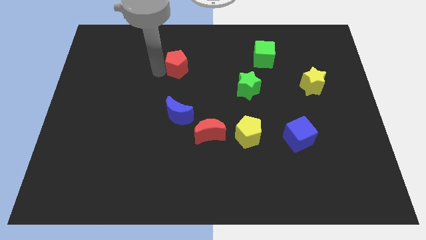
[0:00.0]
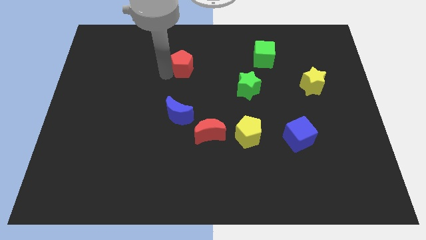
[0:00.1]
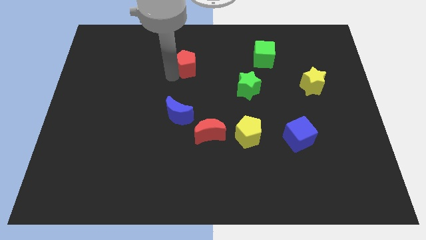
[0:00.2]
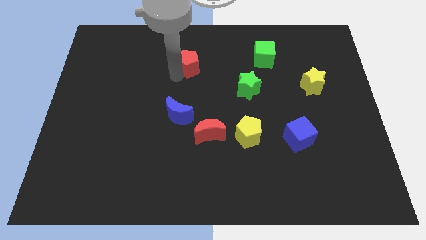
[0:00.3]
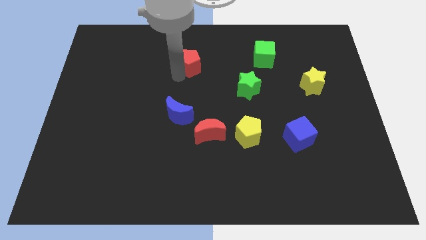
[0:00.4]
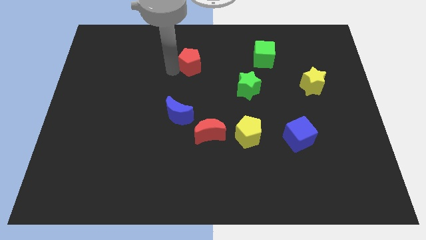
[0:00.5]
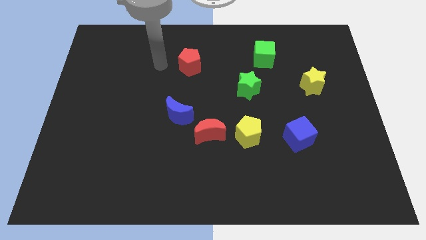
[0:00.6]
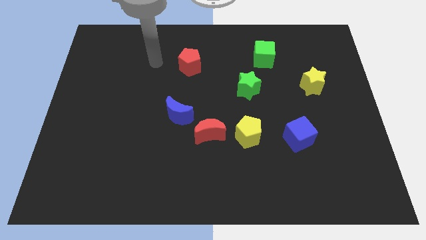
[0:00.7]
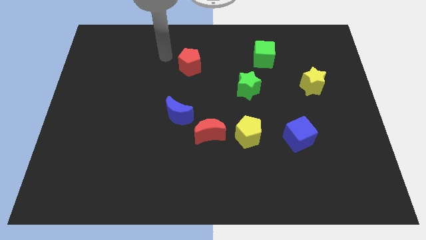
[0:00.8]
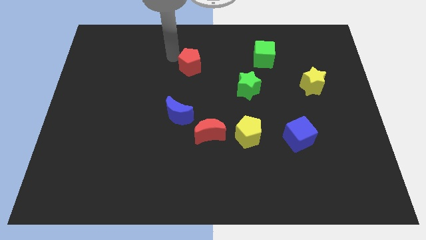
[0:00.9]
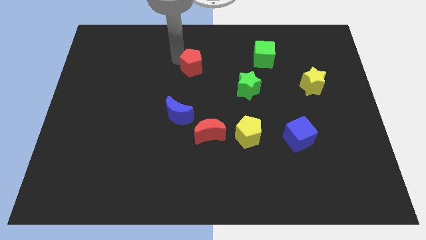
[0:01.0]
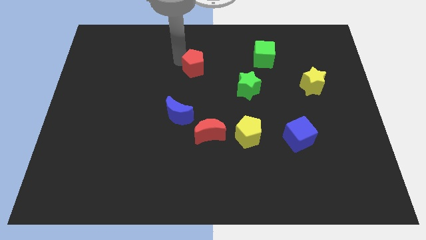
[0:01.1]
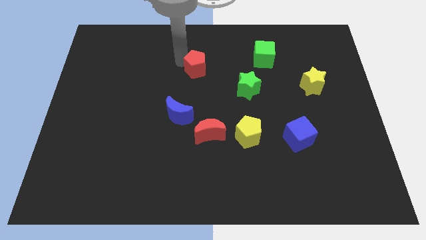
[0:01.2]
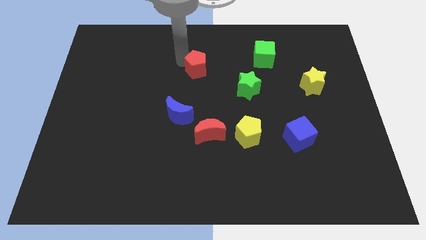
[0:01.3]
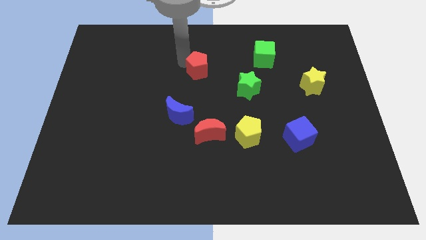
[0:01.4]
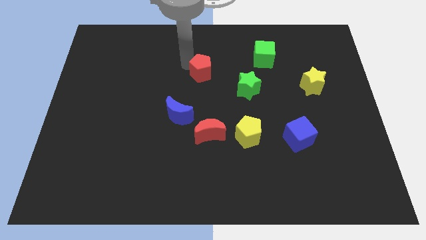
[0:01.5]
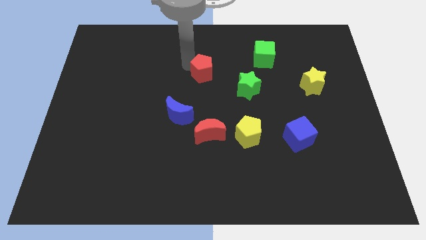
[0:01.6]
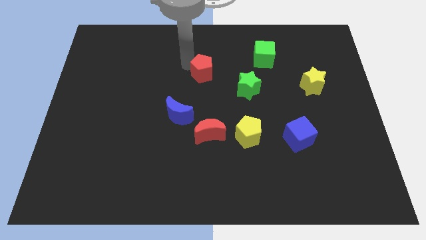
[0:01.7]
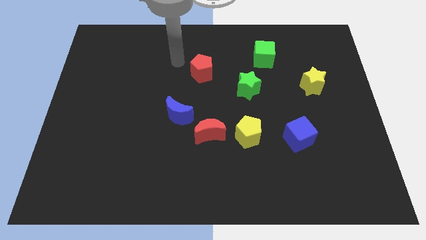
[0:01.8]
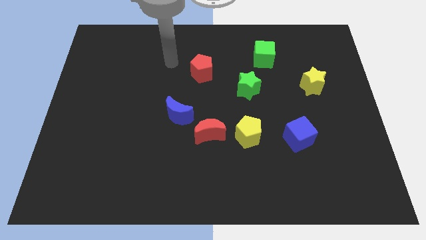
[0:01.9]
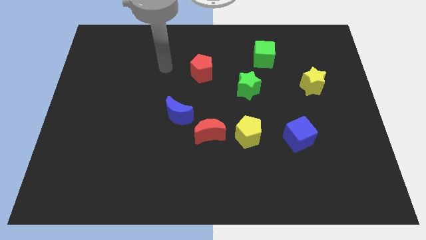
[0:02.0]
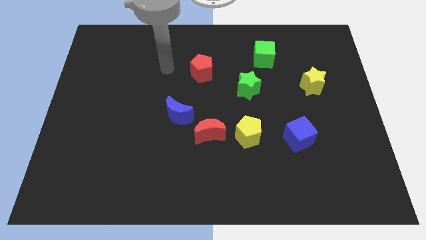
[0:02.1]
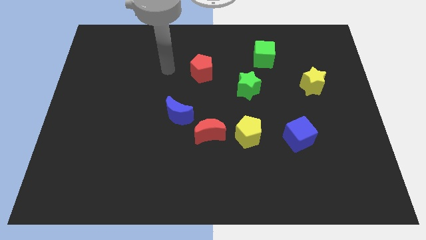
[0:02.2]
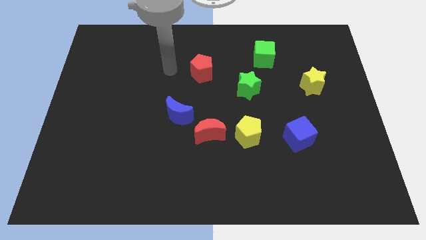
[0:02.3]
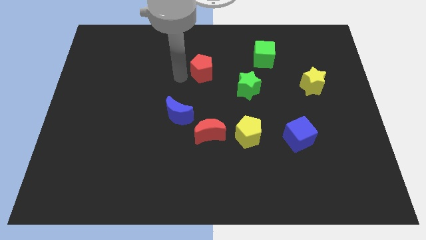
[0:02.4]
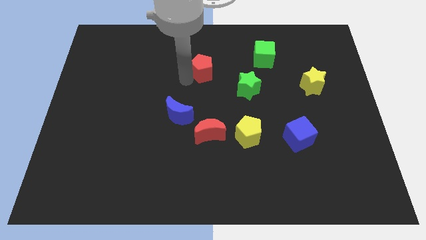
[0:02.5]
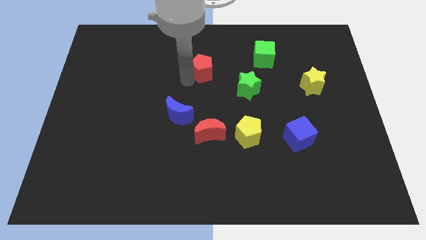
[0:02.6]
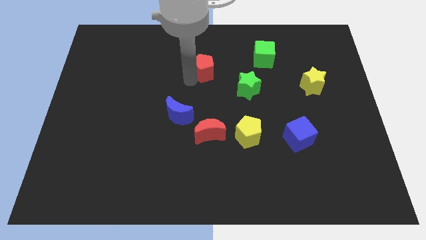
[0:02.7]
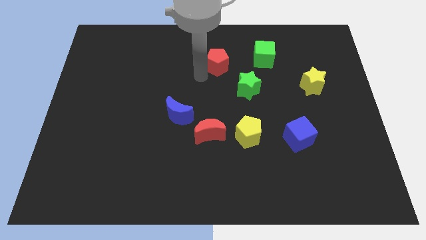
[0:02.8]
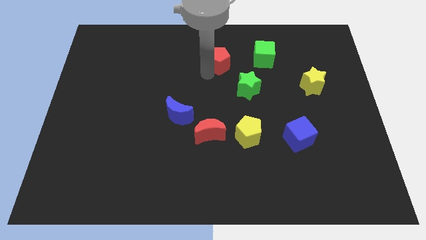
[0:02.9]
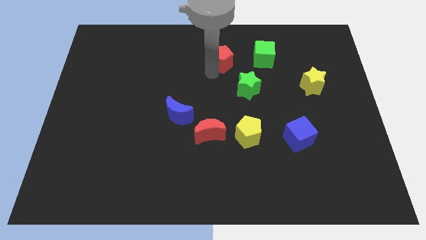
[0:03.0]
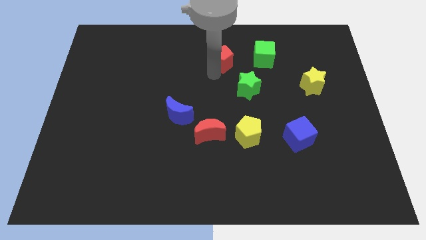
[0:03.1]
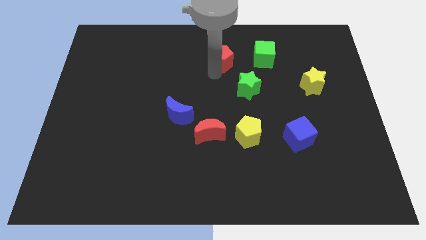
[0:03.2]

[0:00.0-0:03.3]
push the red pentagon vertically at the top of the red crescent

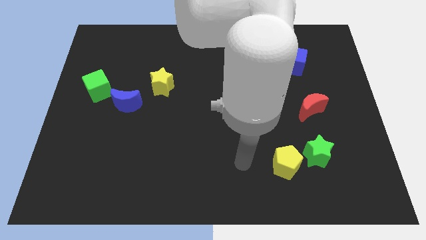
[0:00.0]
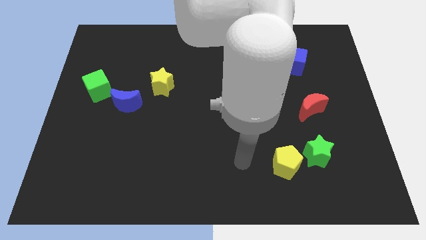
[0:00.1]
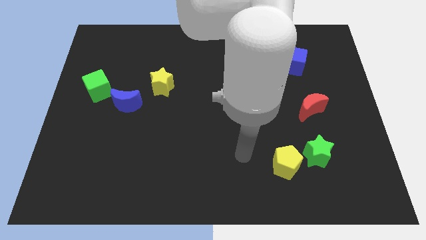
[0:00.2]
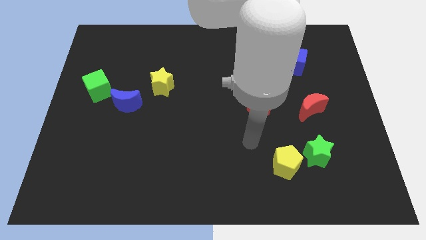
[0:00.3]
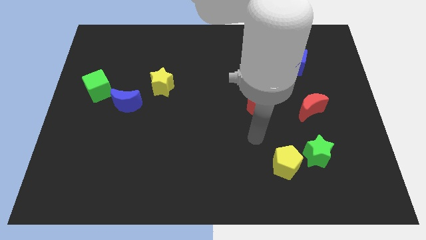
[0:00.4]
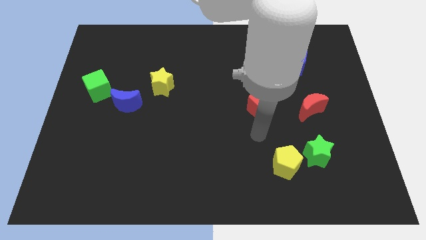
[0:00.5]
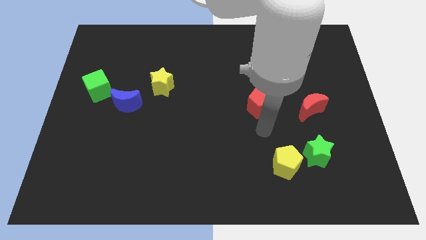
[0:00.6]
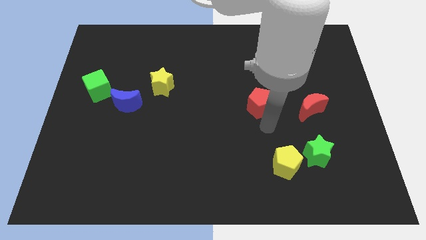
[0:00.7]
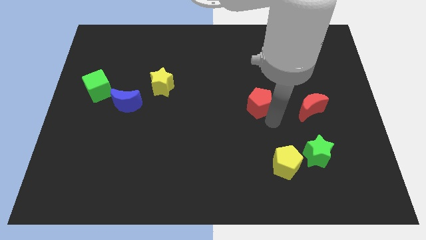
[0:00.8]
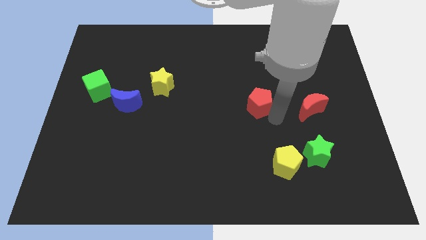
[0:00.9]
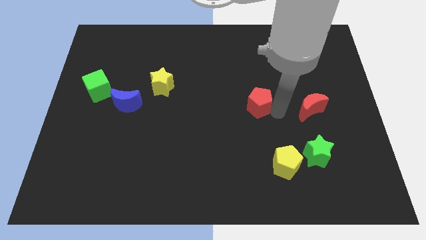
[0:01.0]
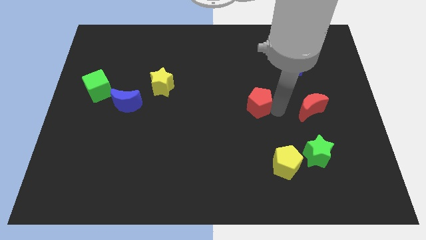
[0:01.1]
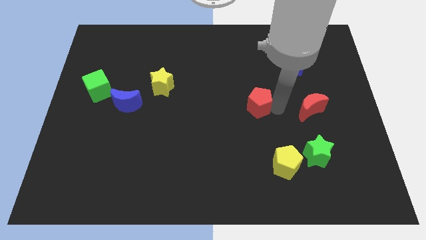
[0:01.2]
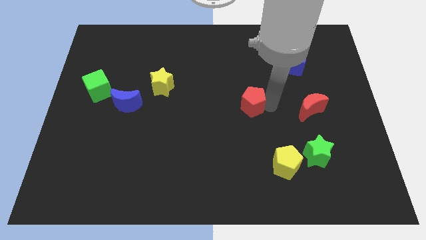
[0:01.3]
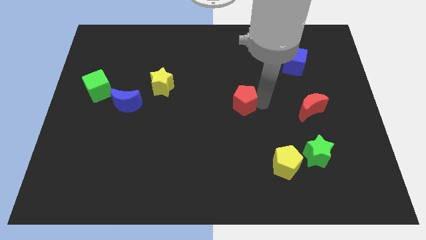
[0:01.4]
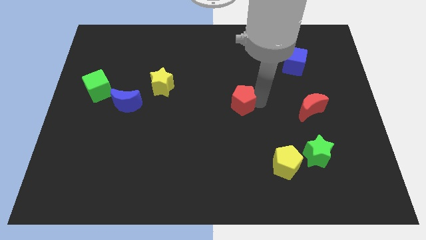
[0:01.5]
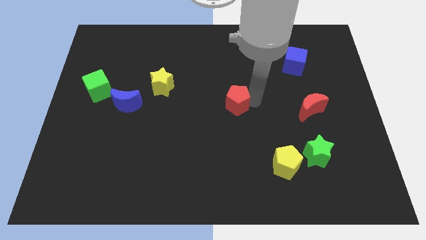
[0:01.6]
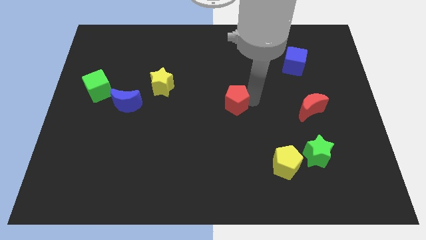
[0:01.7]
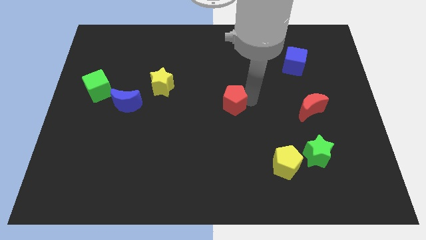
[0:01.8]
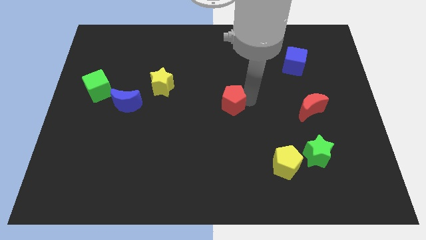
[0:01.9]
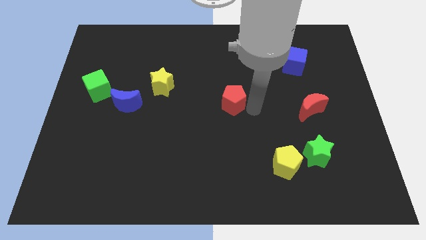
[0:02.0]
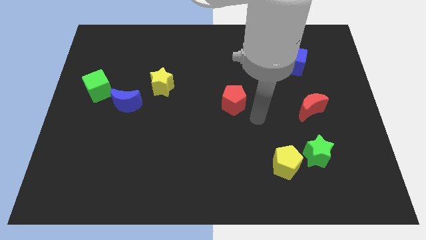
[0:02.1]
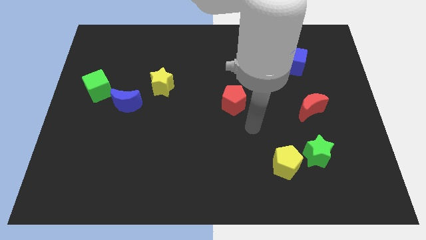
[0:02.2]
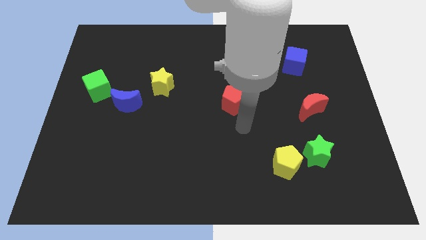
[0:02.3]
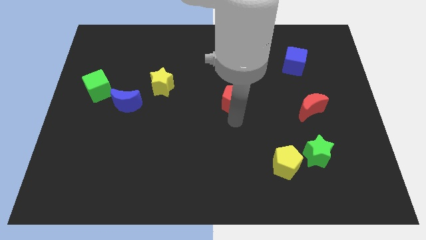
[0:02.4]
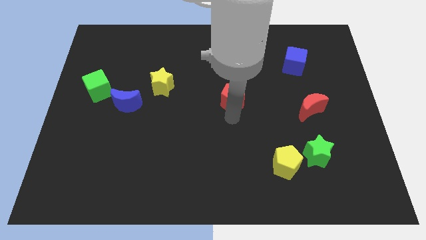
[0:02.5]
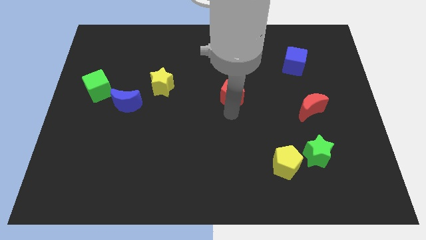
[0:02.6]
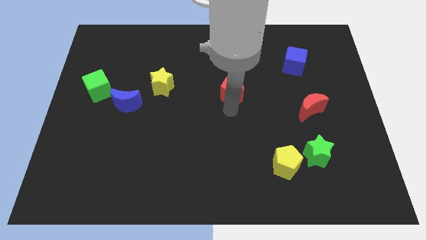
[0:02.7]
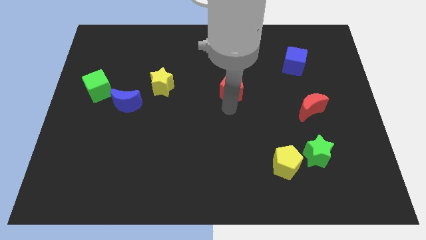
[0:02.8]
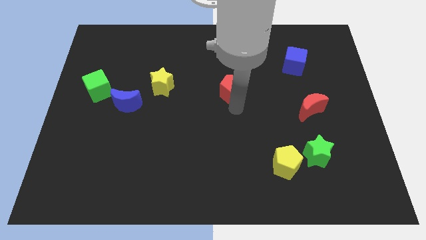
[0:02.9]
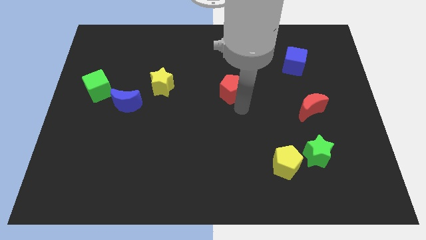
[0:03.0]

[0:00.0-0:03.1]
place red pentagon to the right of yellow star

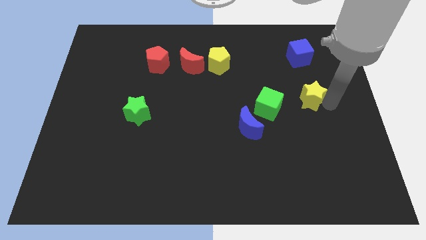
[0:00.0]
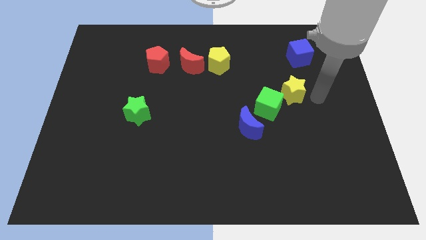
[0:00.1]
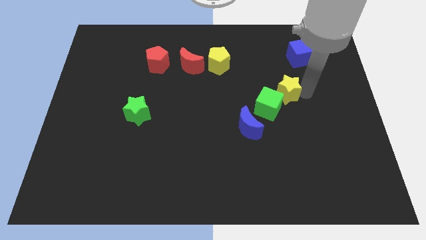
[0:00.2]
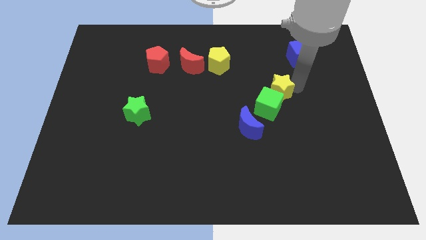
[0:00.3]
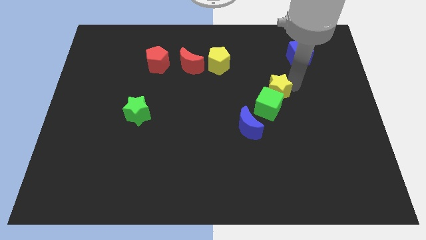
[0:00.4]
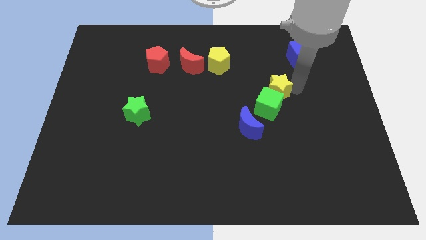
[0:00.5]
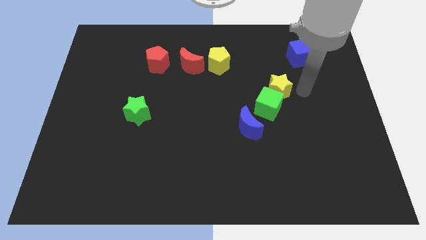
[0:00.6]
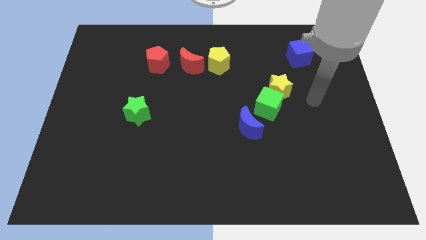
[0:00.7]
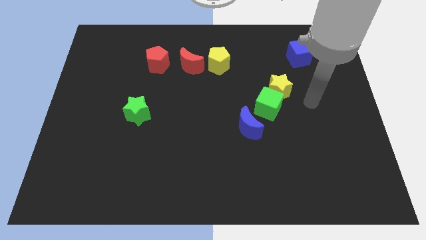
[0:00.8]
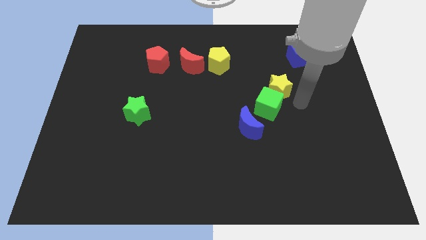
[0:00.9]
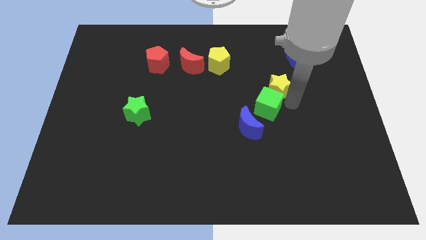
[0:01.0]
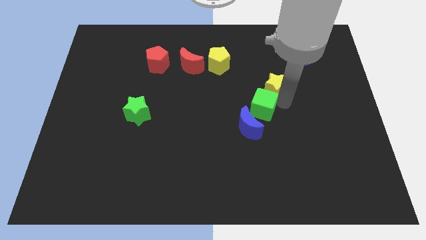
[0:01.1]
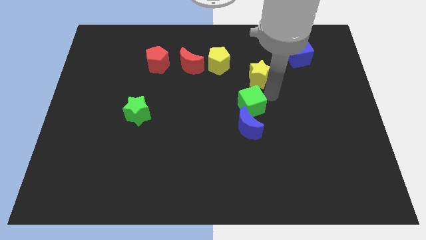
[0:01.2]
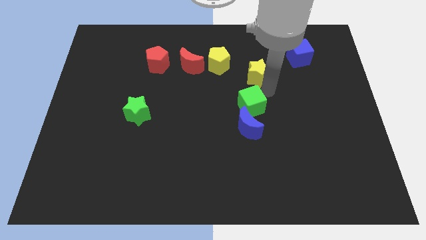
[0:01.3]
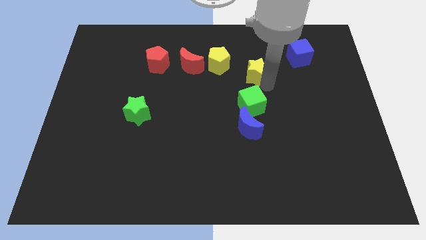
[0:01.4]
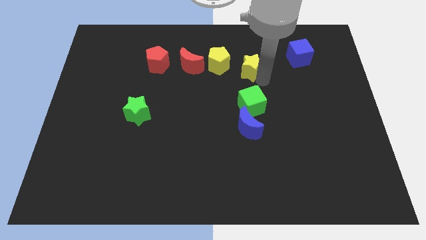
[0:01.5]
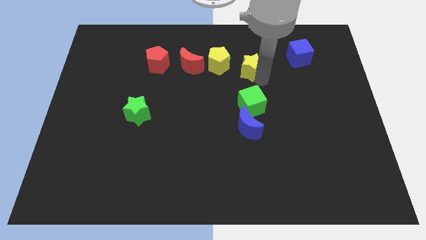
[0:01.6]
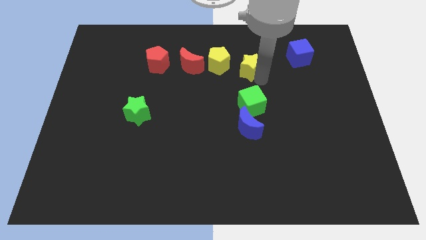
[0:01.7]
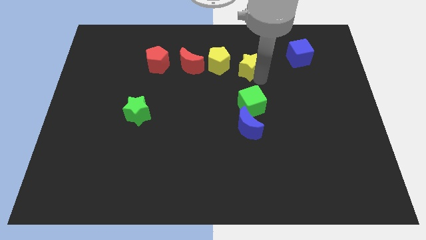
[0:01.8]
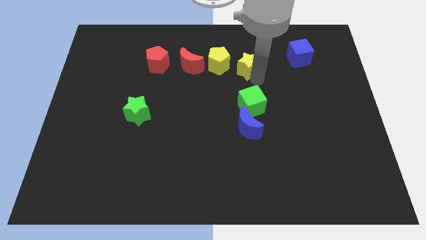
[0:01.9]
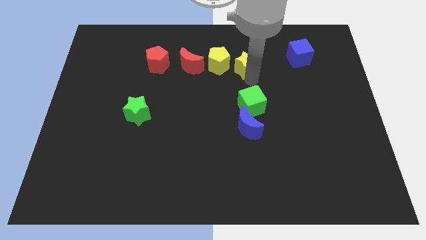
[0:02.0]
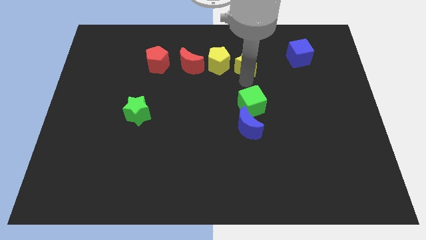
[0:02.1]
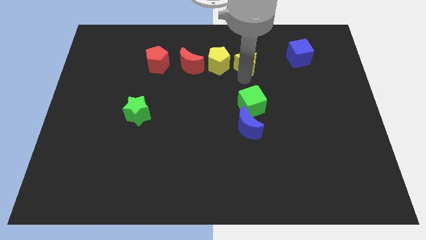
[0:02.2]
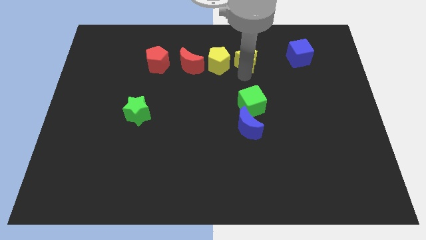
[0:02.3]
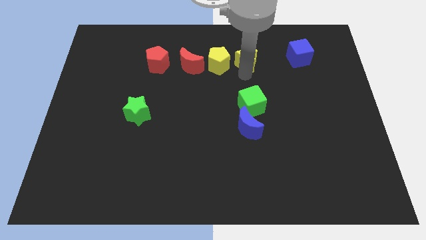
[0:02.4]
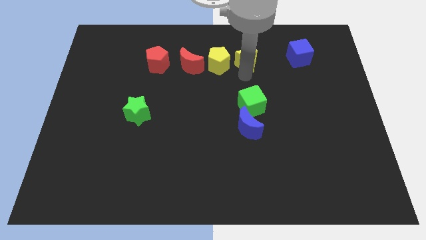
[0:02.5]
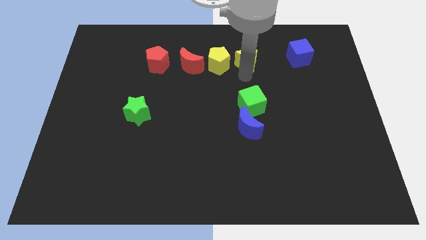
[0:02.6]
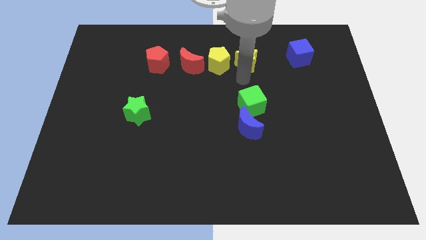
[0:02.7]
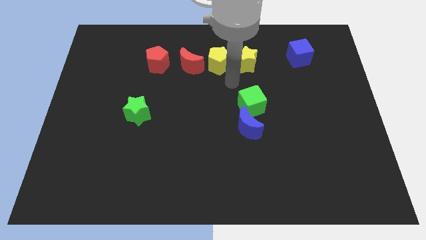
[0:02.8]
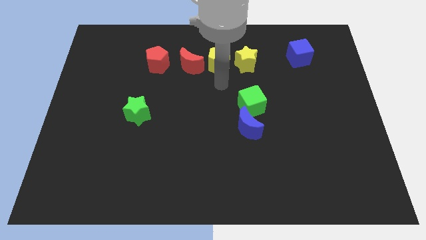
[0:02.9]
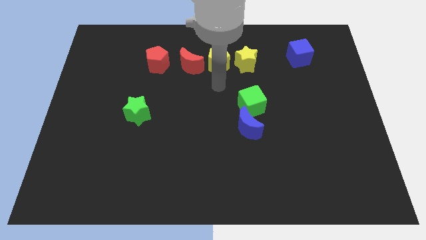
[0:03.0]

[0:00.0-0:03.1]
place the yellow star right of the yellow pentagon
